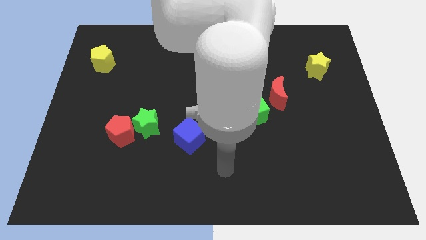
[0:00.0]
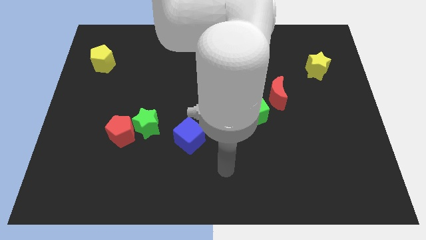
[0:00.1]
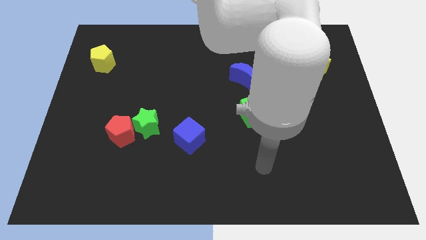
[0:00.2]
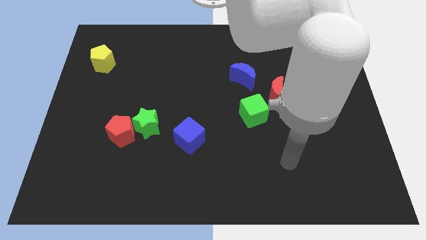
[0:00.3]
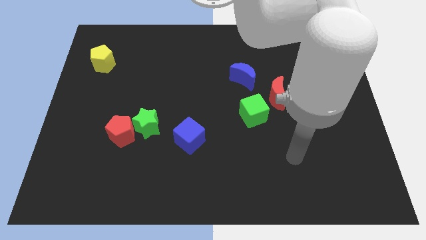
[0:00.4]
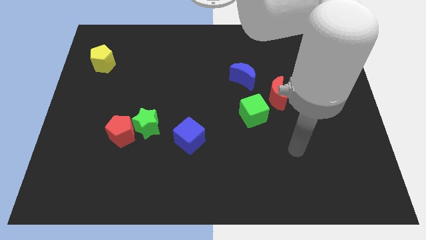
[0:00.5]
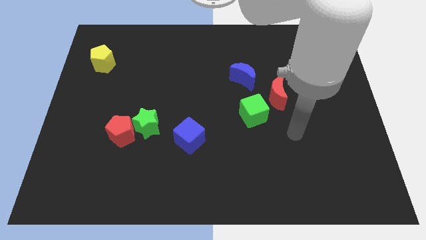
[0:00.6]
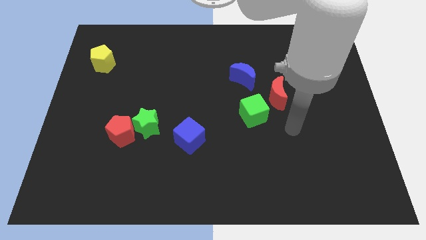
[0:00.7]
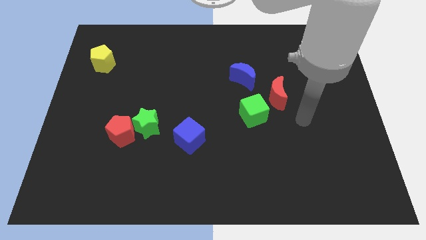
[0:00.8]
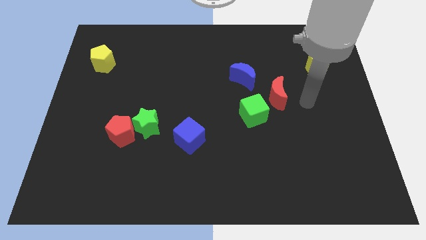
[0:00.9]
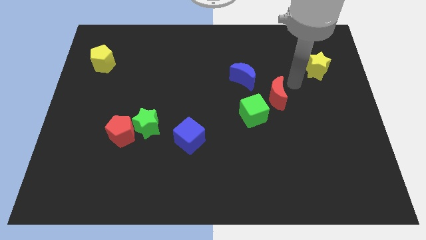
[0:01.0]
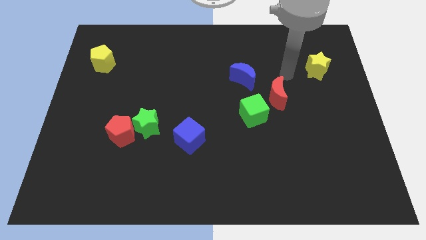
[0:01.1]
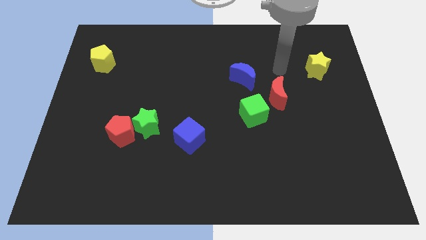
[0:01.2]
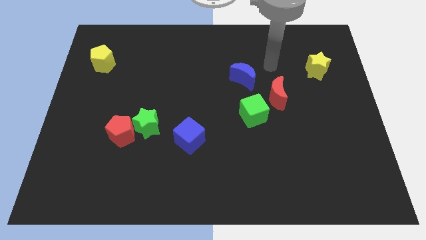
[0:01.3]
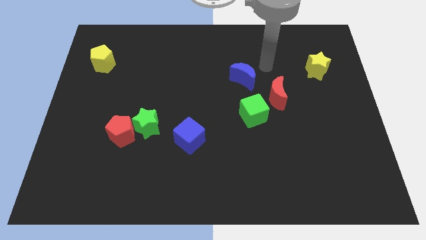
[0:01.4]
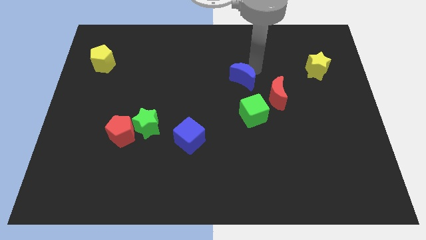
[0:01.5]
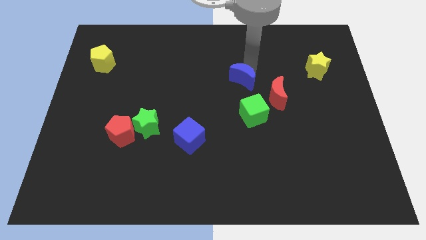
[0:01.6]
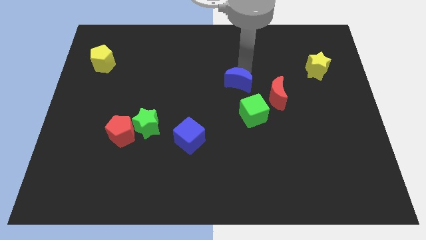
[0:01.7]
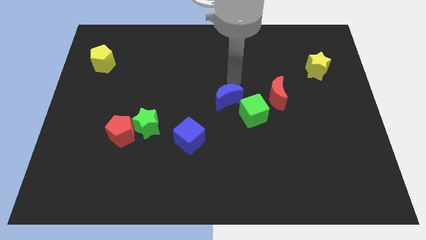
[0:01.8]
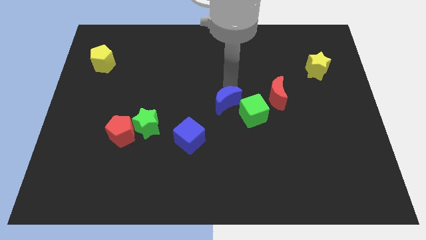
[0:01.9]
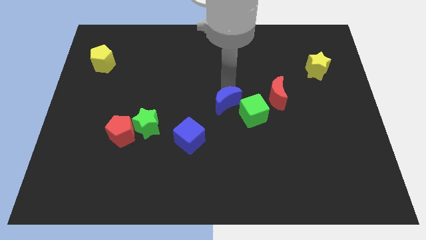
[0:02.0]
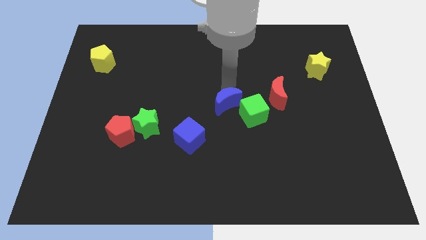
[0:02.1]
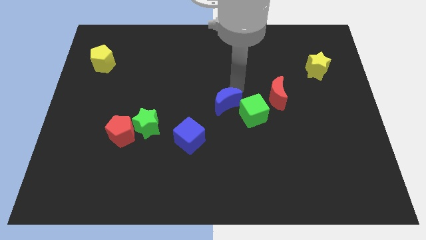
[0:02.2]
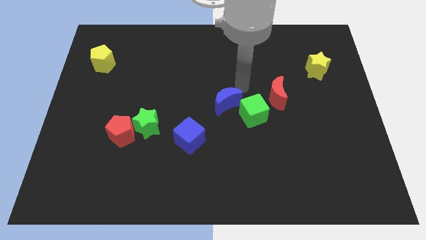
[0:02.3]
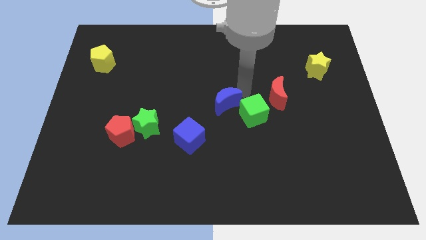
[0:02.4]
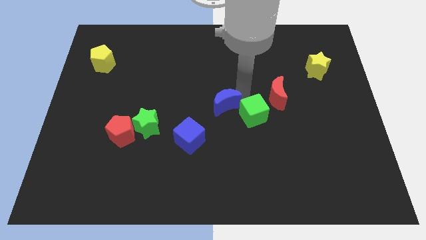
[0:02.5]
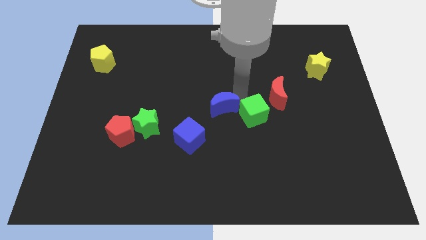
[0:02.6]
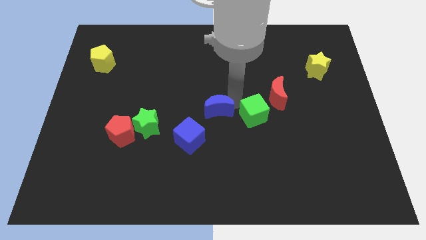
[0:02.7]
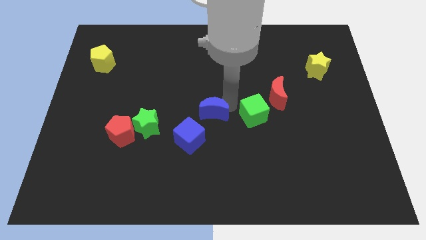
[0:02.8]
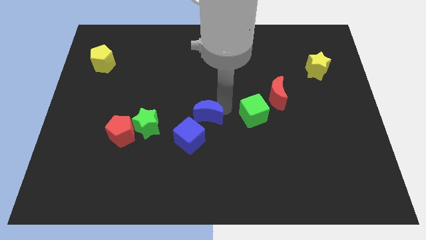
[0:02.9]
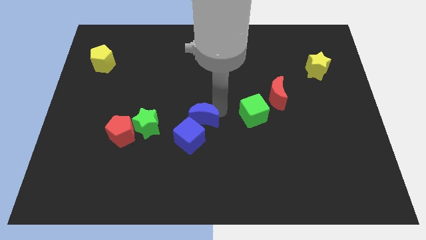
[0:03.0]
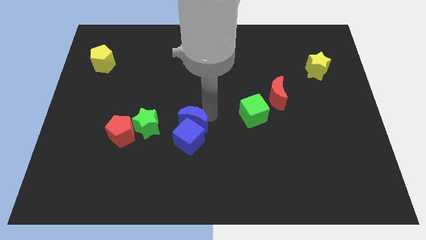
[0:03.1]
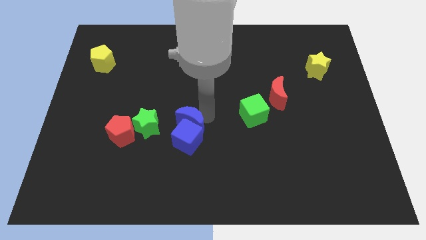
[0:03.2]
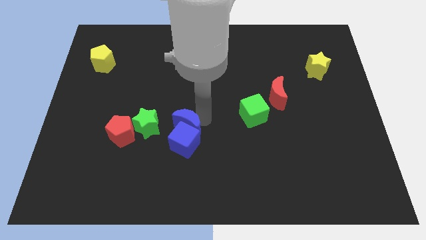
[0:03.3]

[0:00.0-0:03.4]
put the blue moon next to the blue cube

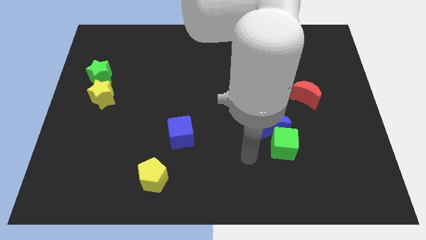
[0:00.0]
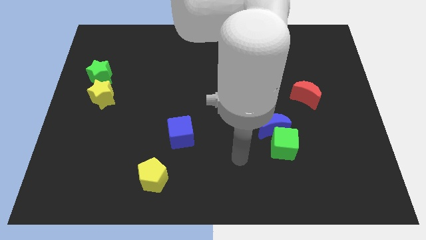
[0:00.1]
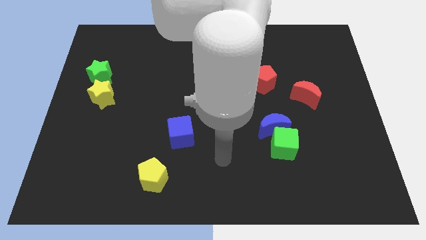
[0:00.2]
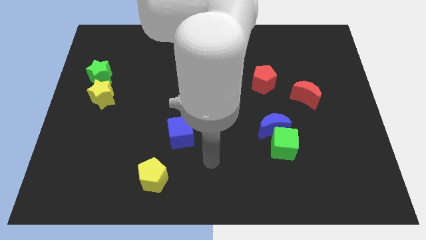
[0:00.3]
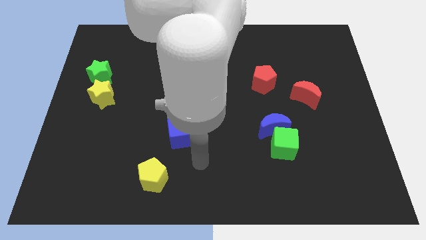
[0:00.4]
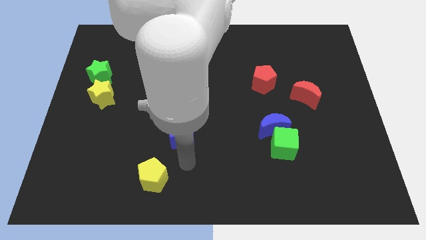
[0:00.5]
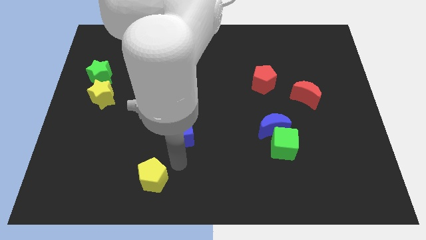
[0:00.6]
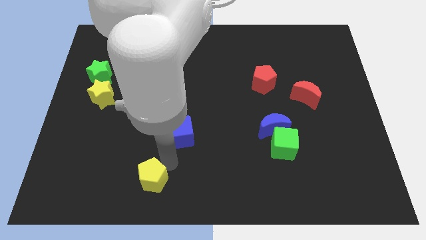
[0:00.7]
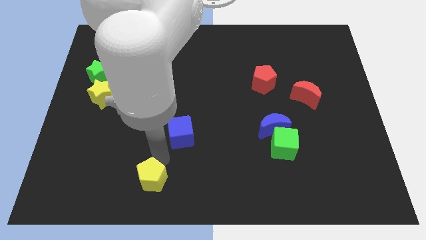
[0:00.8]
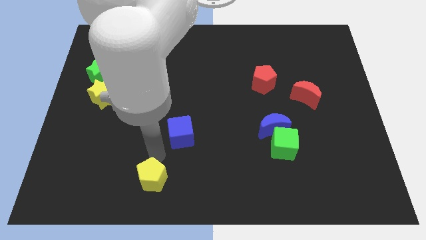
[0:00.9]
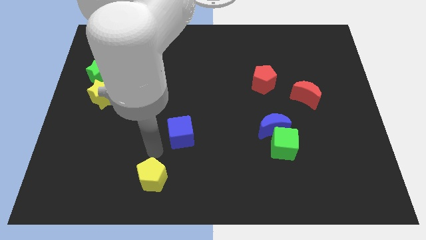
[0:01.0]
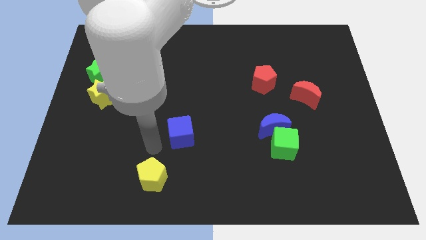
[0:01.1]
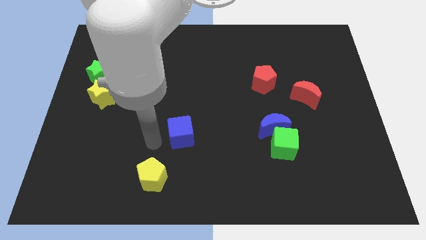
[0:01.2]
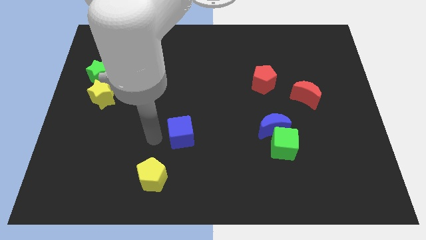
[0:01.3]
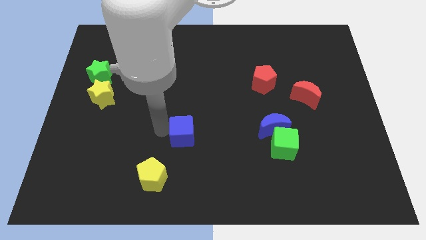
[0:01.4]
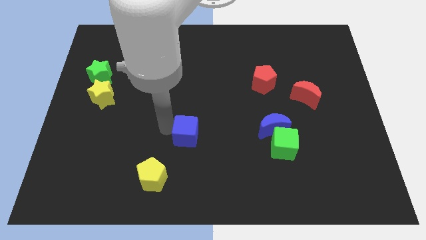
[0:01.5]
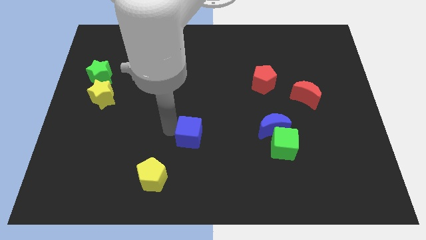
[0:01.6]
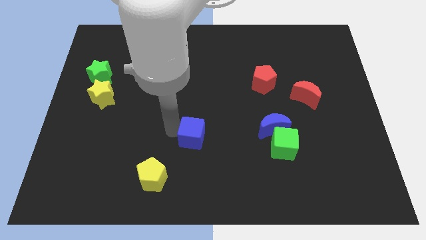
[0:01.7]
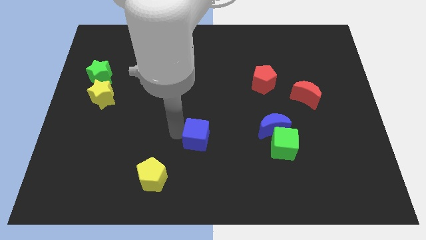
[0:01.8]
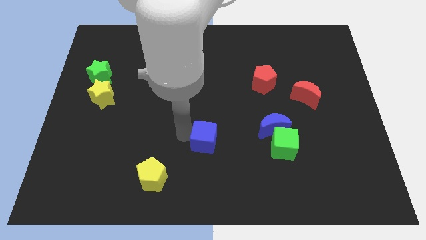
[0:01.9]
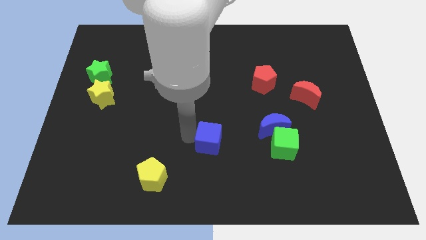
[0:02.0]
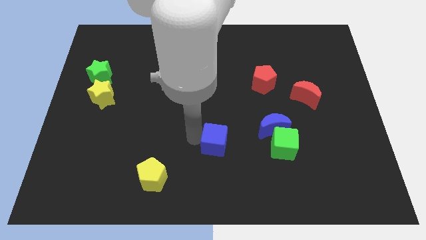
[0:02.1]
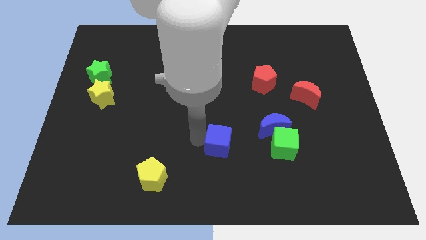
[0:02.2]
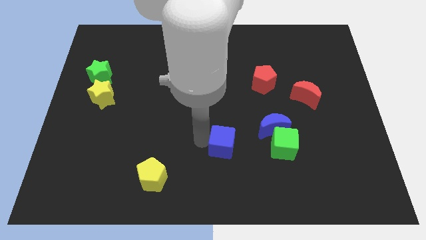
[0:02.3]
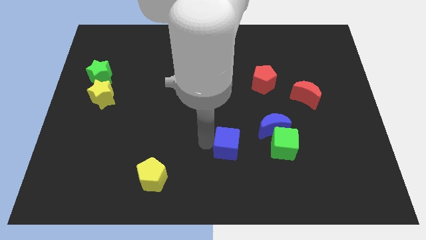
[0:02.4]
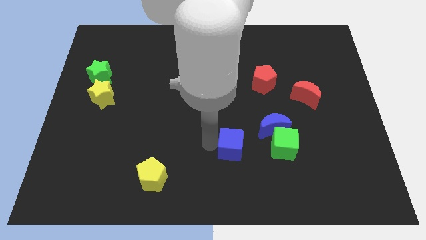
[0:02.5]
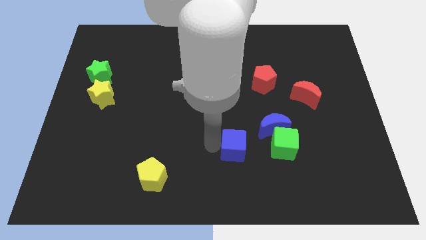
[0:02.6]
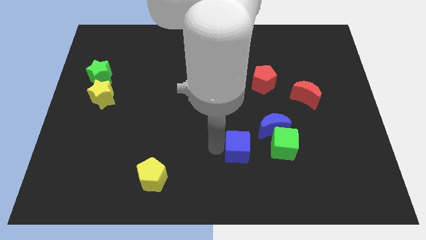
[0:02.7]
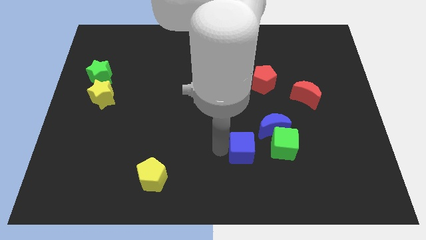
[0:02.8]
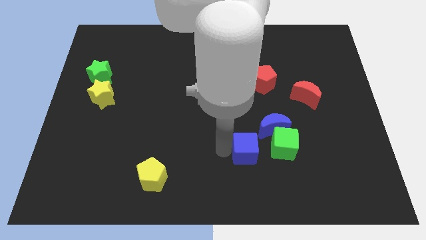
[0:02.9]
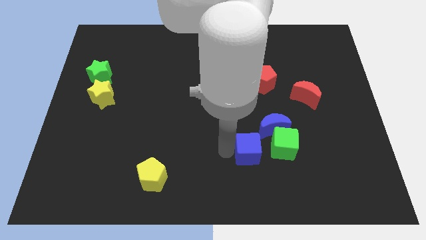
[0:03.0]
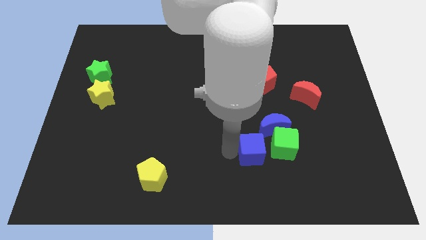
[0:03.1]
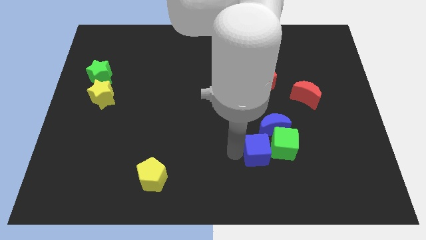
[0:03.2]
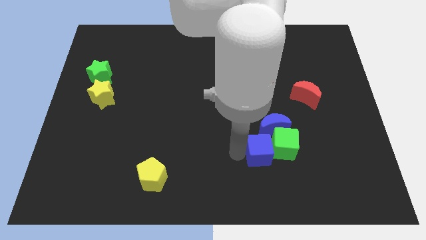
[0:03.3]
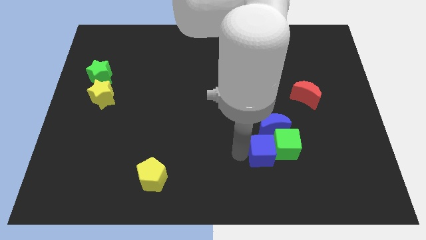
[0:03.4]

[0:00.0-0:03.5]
slide the blue cube to the green cube

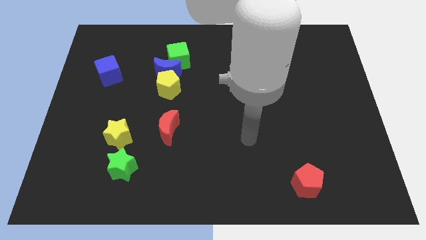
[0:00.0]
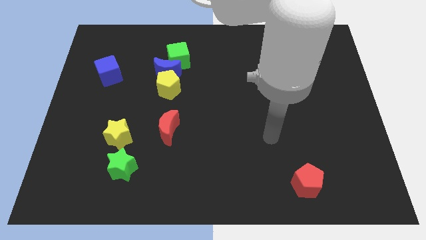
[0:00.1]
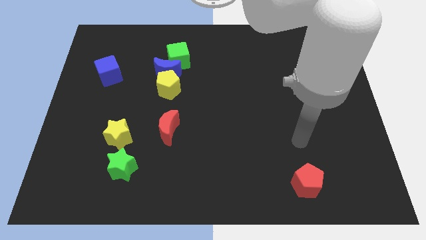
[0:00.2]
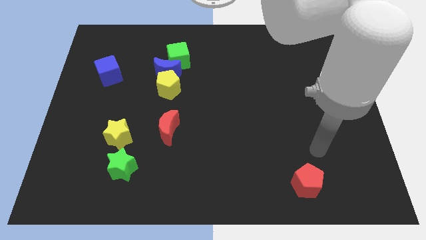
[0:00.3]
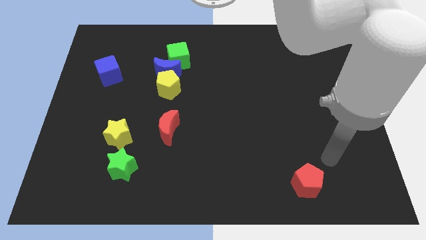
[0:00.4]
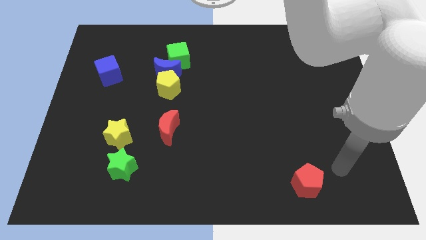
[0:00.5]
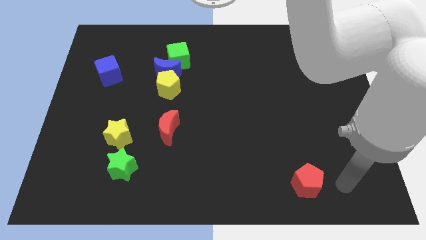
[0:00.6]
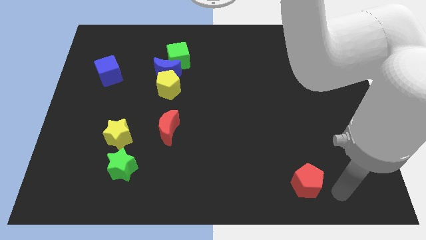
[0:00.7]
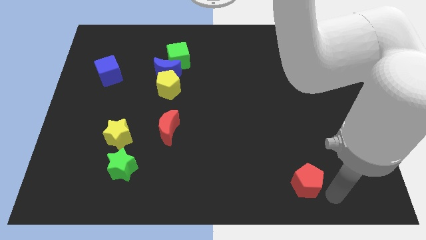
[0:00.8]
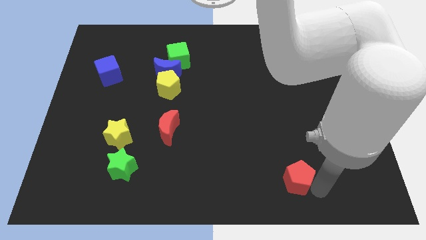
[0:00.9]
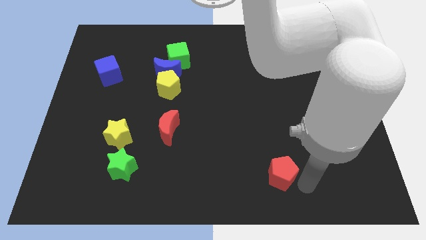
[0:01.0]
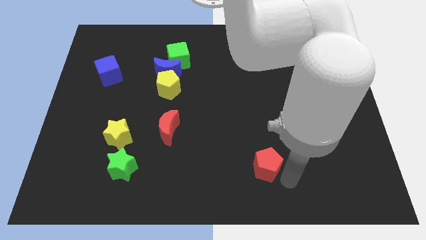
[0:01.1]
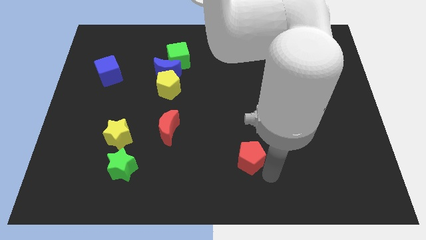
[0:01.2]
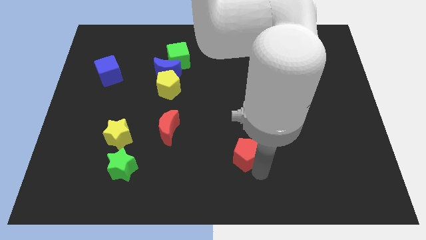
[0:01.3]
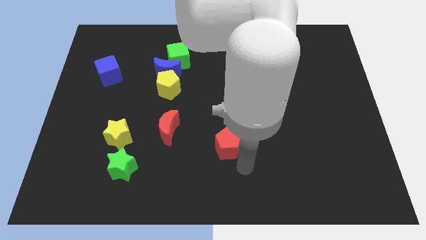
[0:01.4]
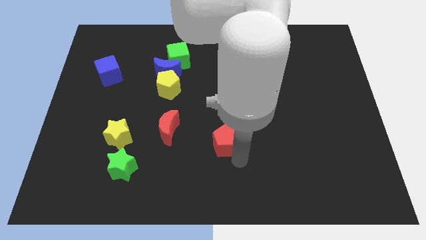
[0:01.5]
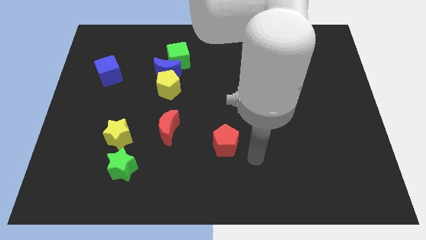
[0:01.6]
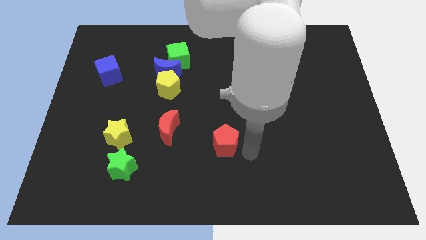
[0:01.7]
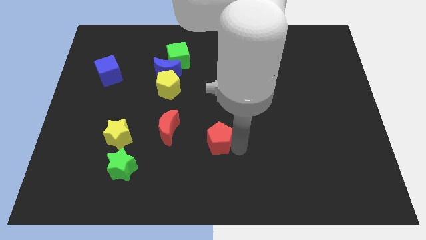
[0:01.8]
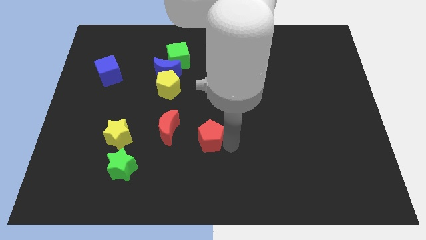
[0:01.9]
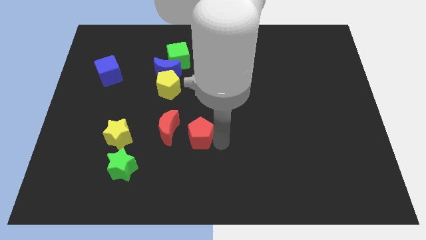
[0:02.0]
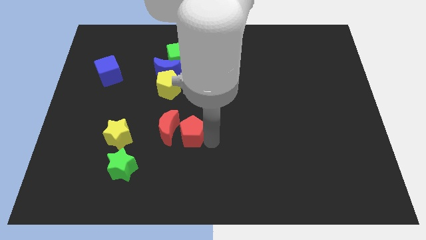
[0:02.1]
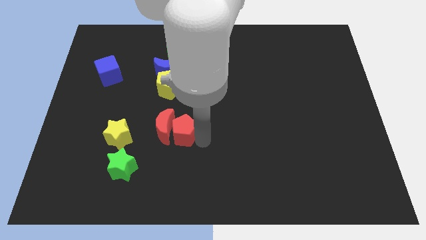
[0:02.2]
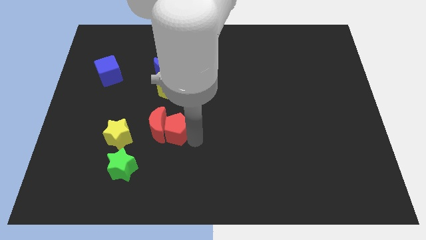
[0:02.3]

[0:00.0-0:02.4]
push the red pentagon to the red moon
